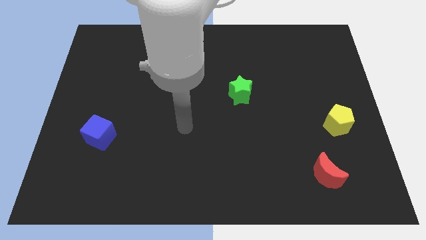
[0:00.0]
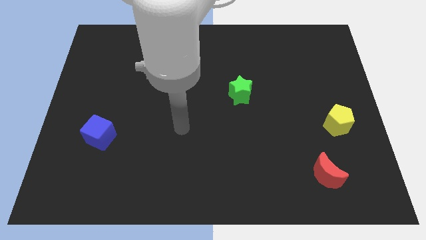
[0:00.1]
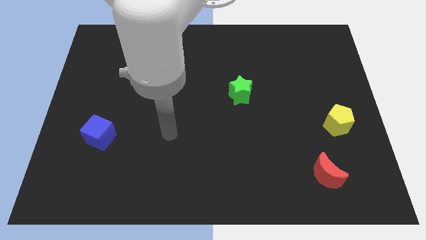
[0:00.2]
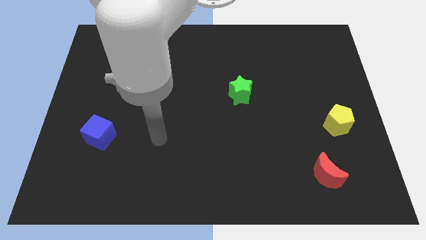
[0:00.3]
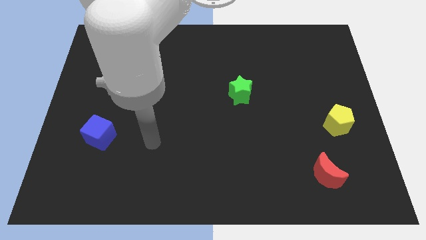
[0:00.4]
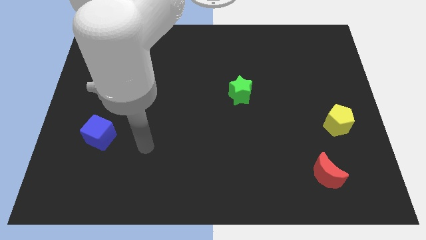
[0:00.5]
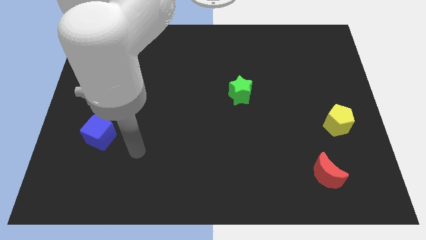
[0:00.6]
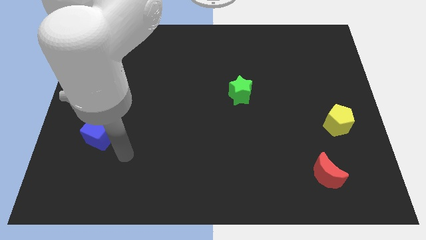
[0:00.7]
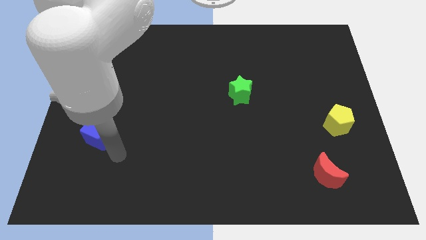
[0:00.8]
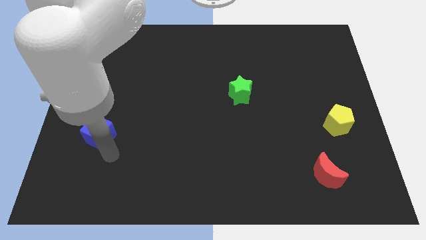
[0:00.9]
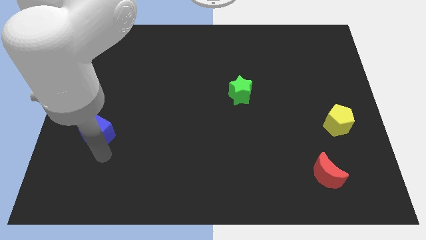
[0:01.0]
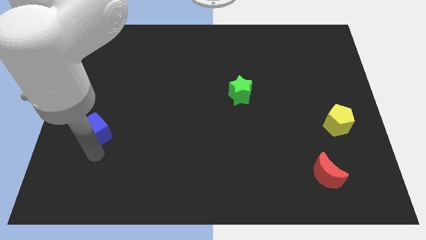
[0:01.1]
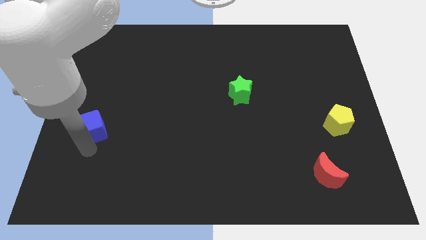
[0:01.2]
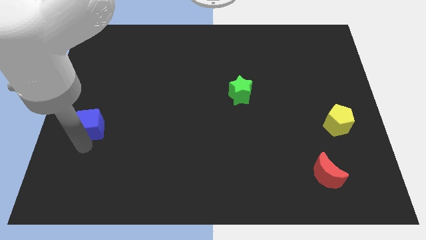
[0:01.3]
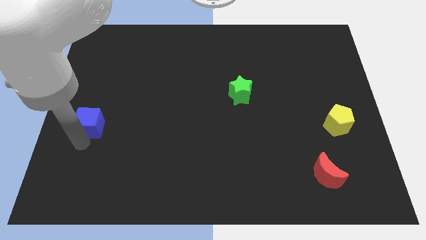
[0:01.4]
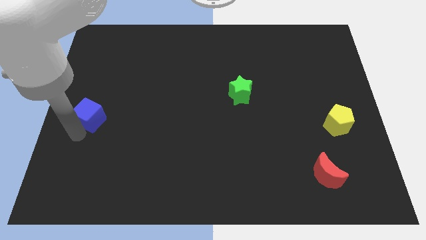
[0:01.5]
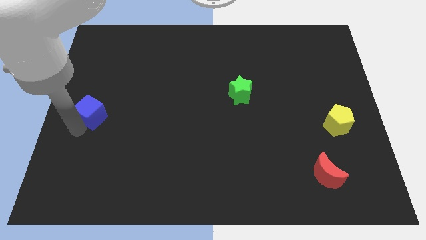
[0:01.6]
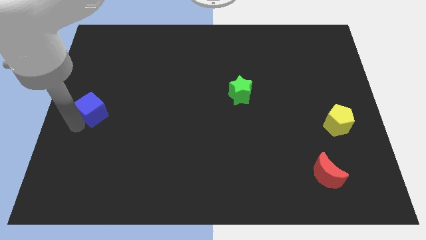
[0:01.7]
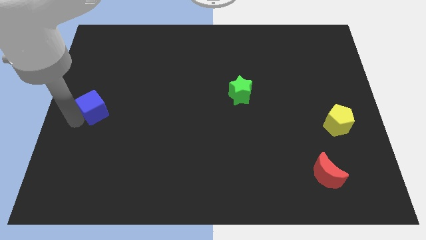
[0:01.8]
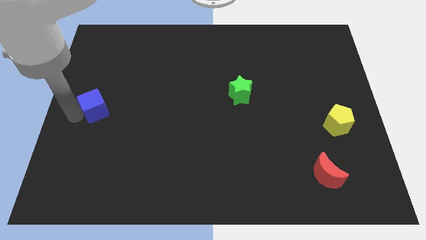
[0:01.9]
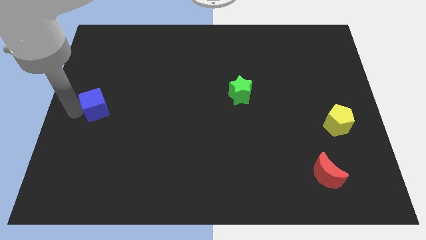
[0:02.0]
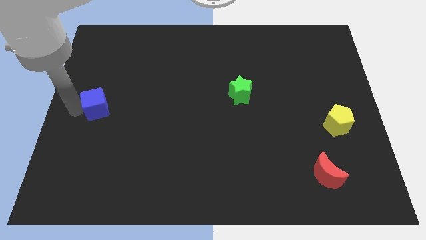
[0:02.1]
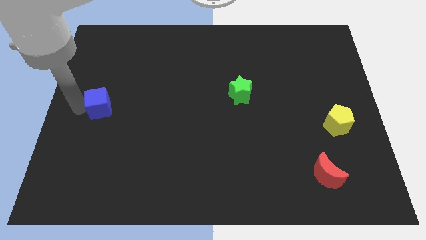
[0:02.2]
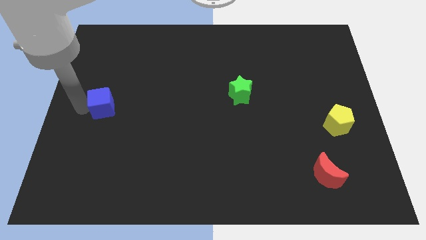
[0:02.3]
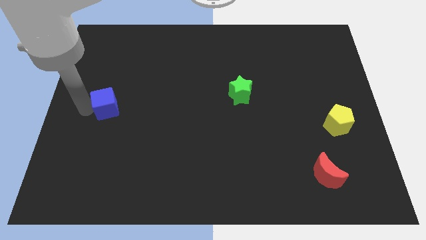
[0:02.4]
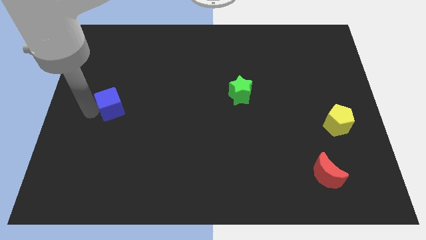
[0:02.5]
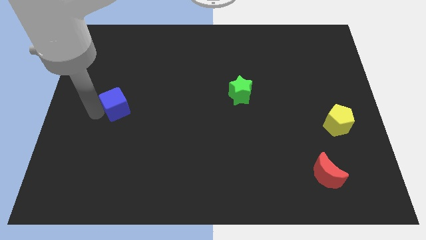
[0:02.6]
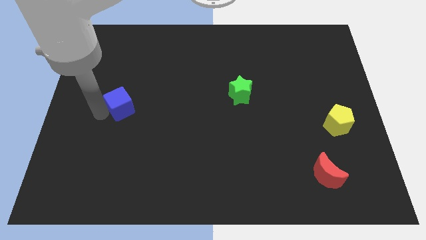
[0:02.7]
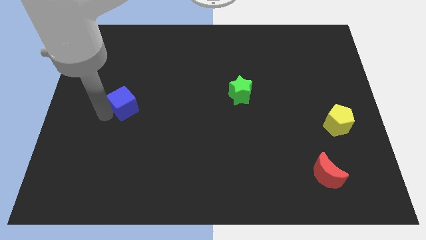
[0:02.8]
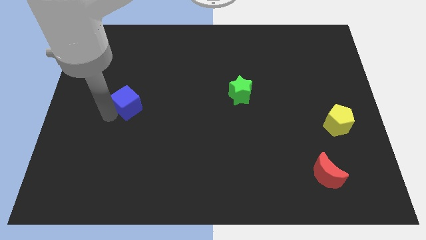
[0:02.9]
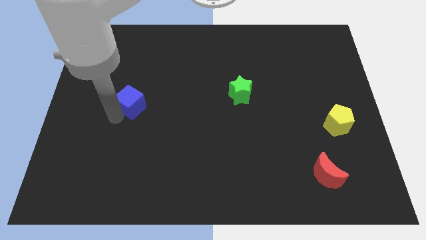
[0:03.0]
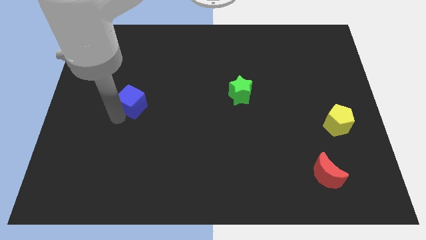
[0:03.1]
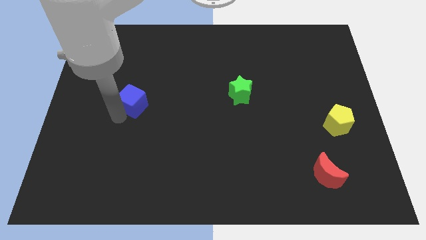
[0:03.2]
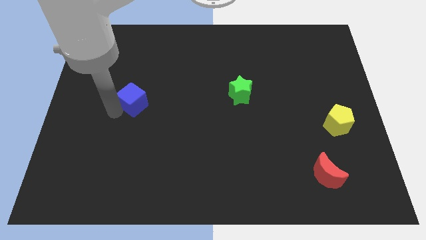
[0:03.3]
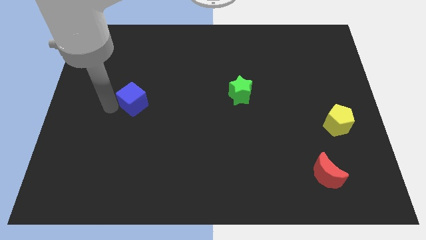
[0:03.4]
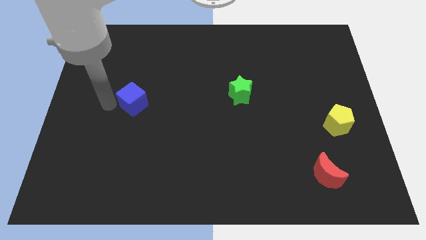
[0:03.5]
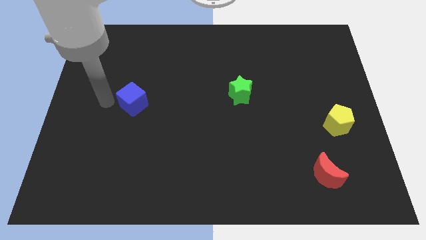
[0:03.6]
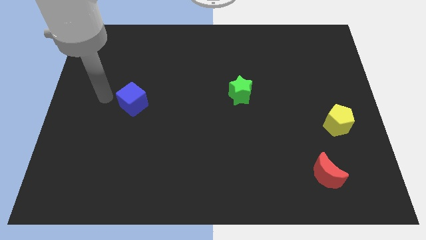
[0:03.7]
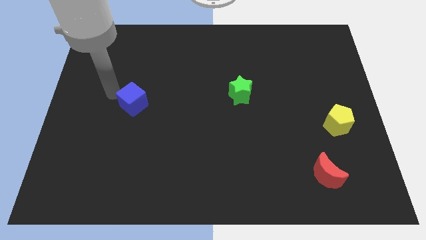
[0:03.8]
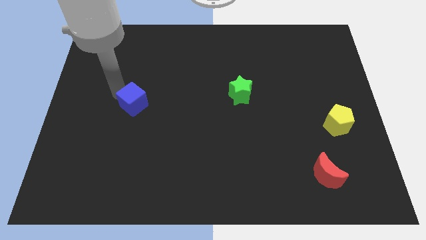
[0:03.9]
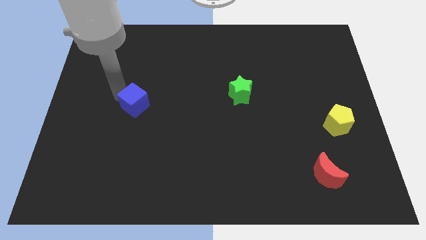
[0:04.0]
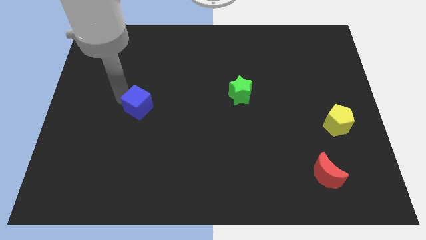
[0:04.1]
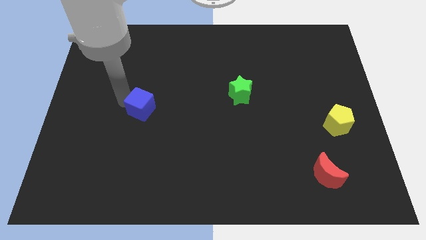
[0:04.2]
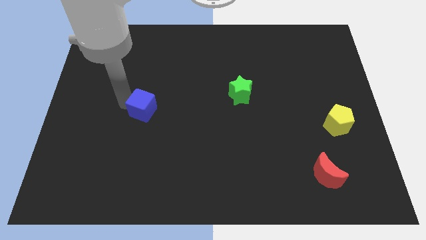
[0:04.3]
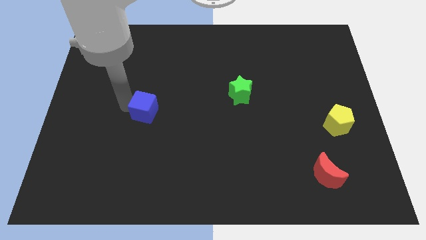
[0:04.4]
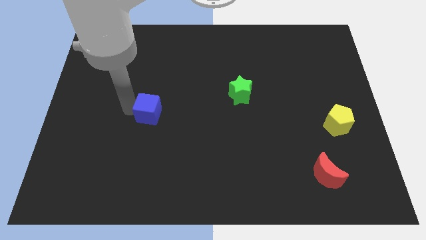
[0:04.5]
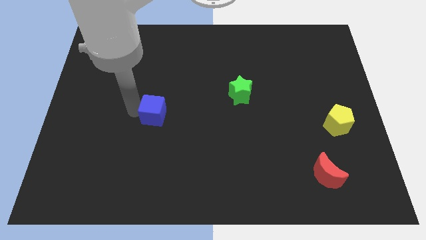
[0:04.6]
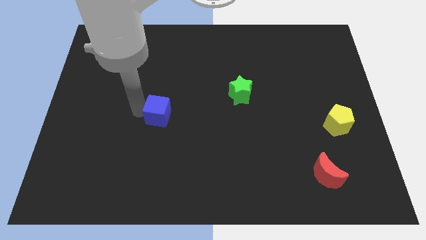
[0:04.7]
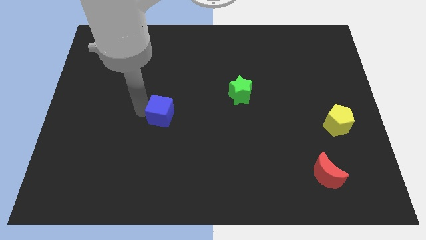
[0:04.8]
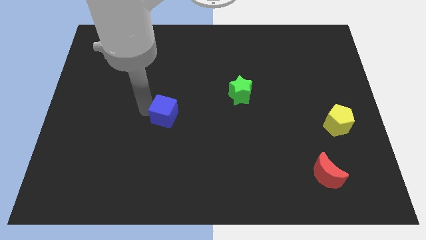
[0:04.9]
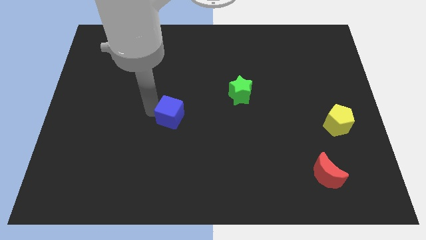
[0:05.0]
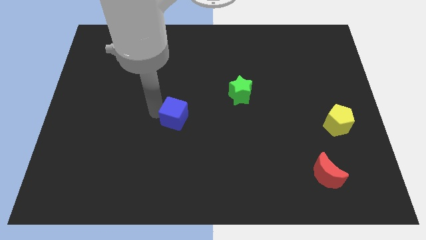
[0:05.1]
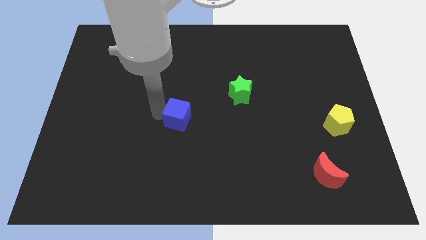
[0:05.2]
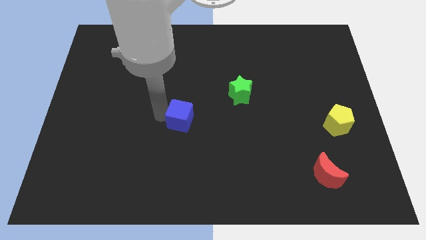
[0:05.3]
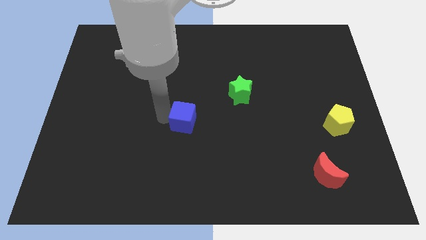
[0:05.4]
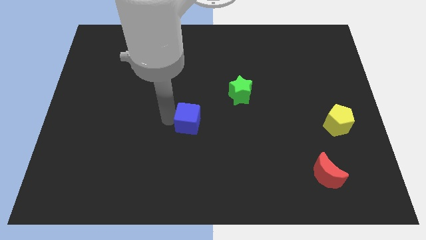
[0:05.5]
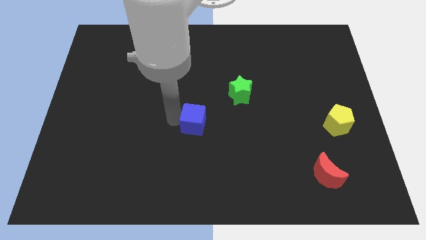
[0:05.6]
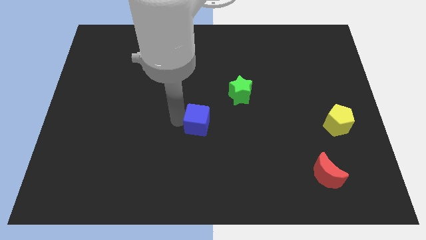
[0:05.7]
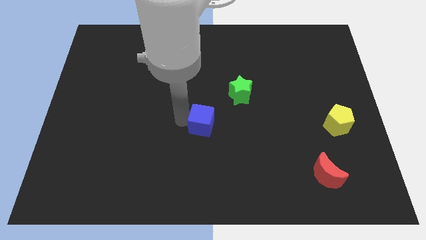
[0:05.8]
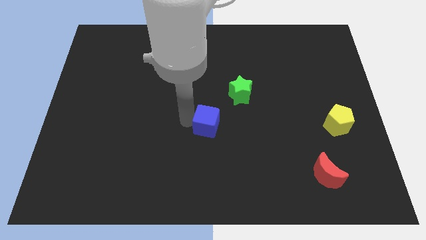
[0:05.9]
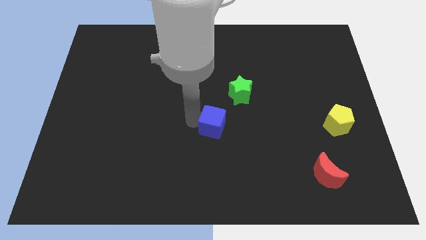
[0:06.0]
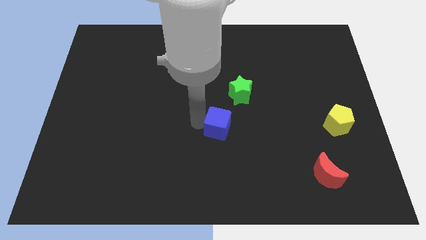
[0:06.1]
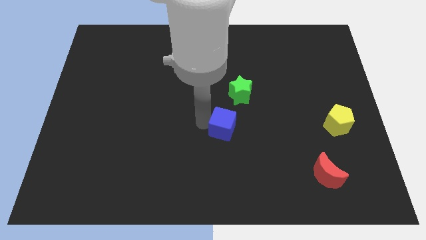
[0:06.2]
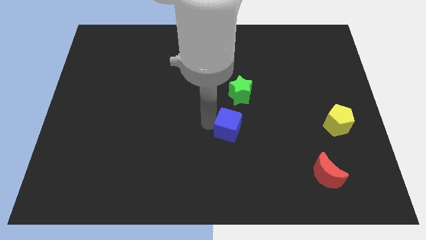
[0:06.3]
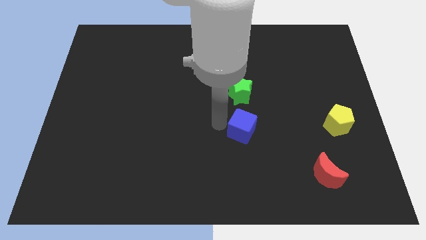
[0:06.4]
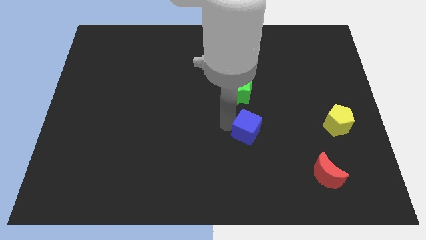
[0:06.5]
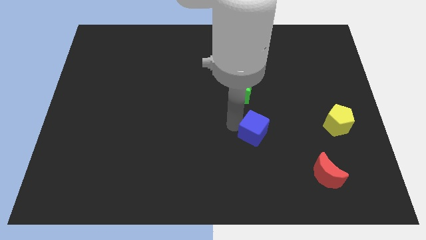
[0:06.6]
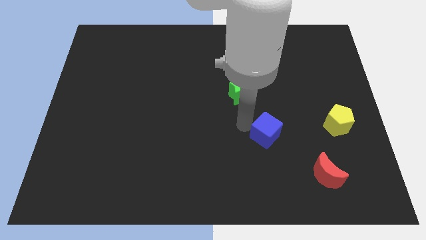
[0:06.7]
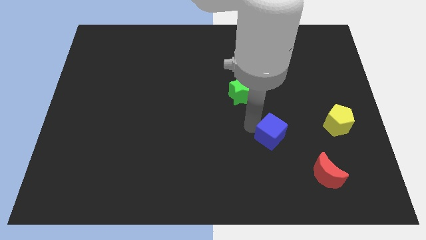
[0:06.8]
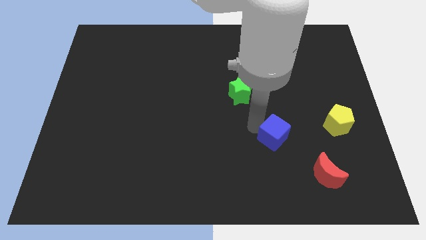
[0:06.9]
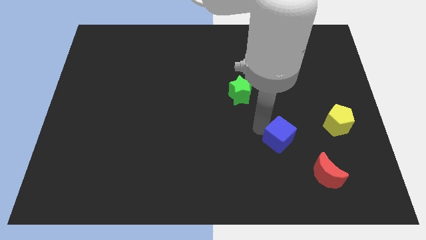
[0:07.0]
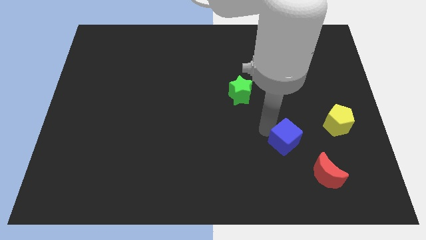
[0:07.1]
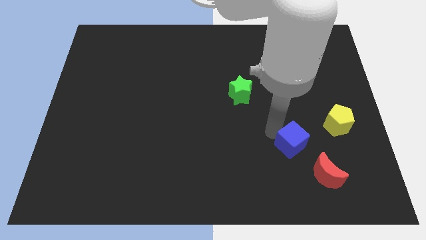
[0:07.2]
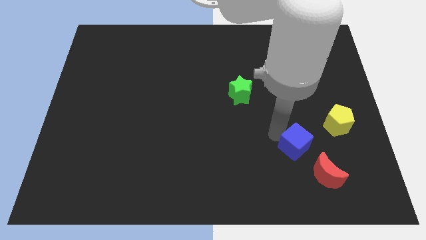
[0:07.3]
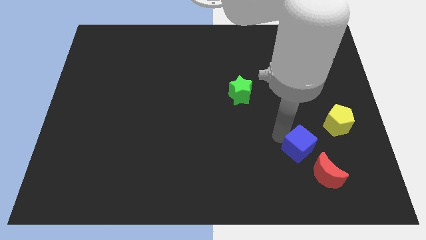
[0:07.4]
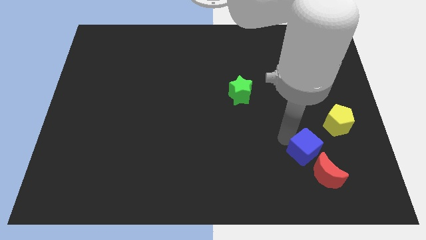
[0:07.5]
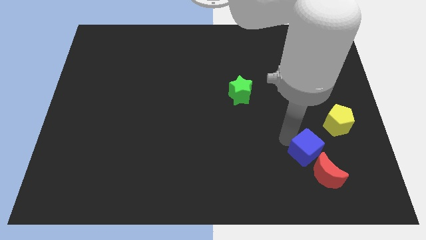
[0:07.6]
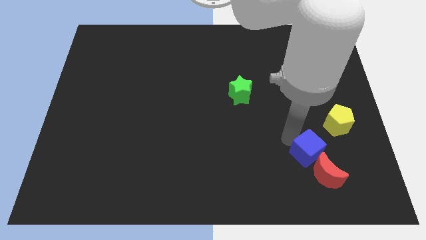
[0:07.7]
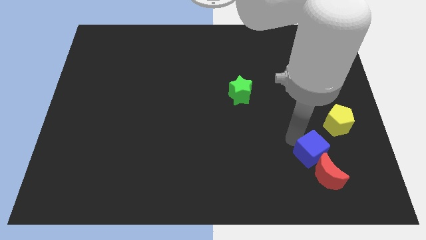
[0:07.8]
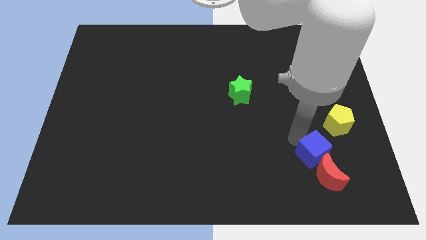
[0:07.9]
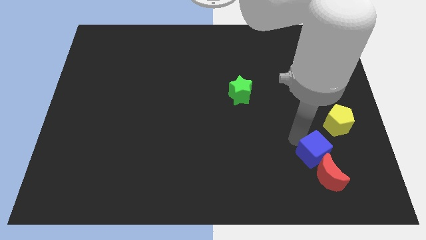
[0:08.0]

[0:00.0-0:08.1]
move the blue block next to the moon
